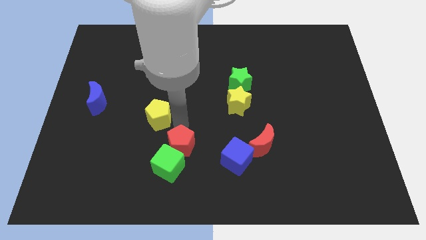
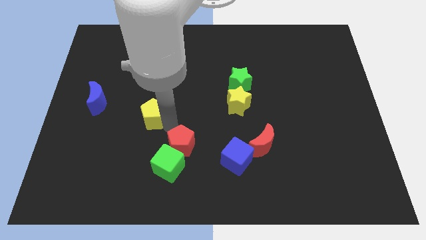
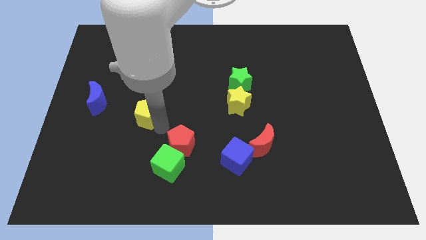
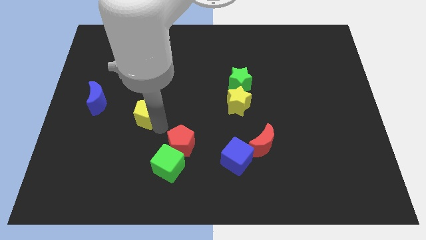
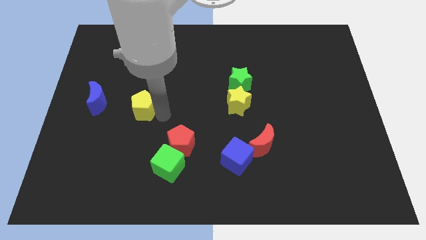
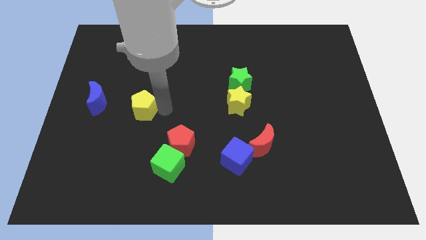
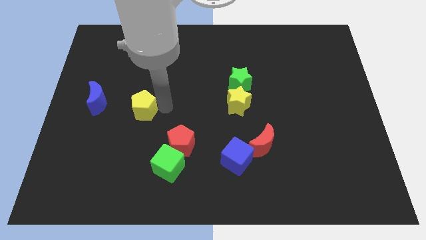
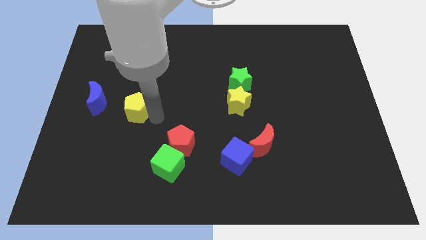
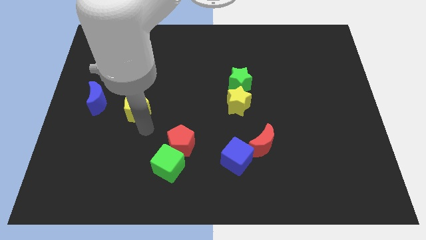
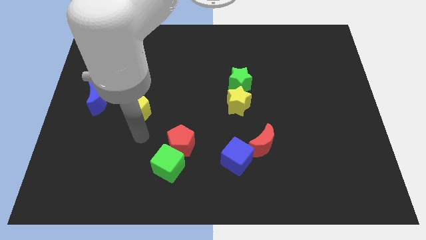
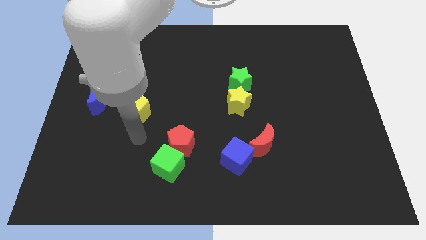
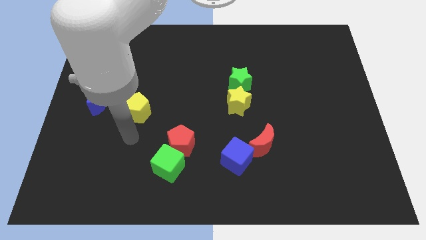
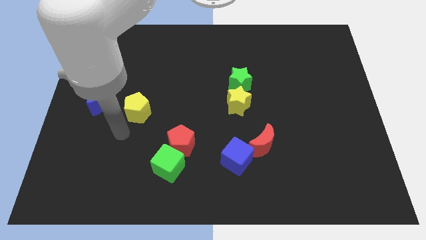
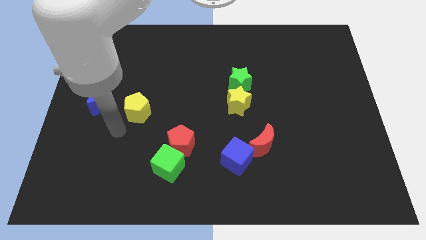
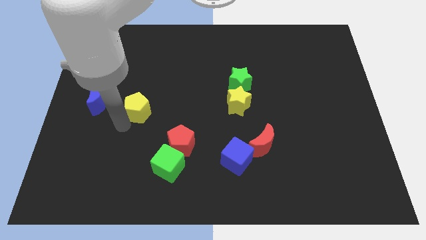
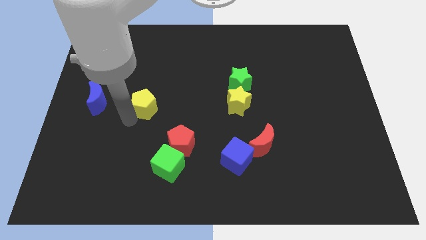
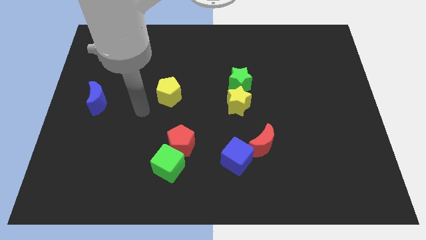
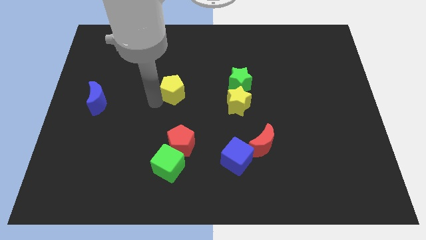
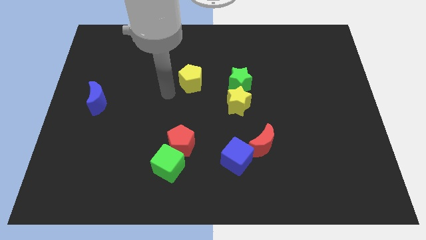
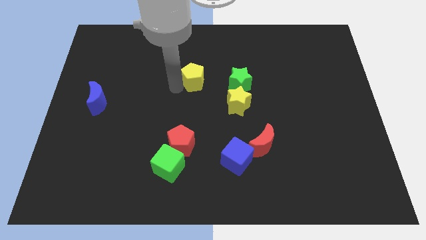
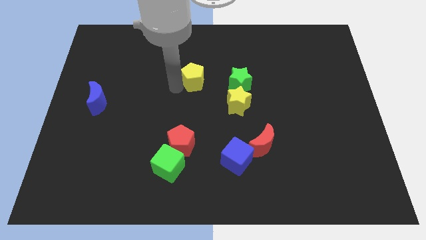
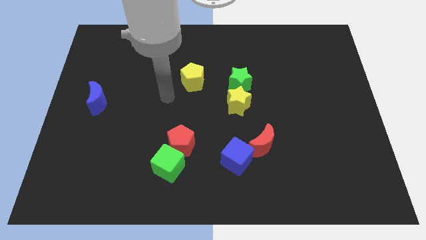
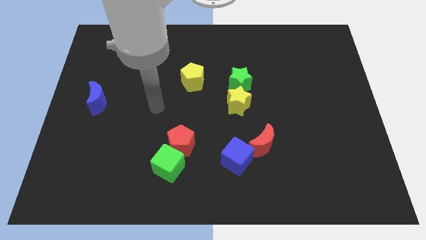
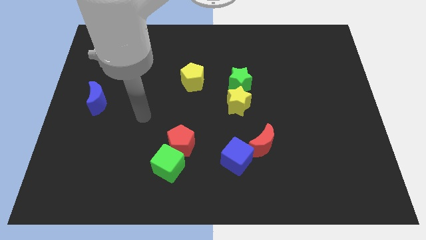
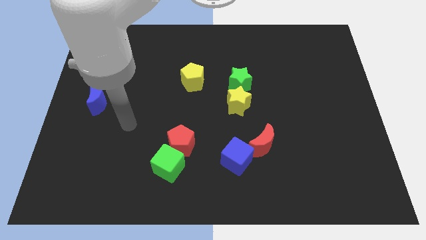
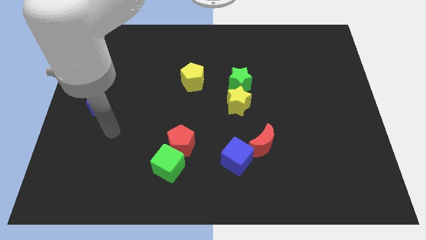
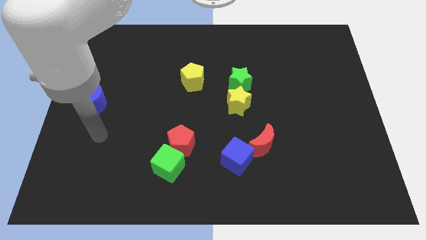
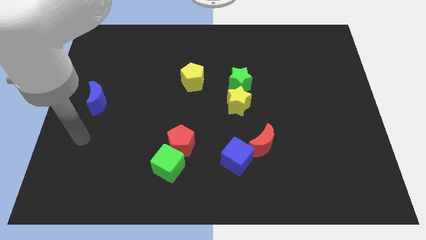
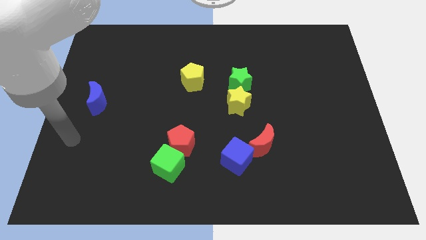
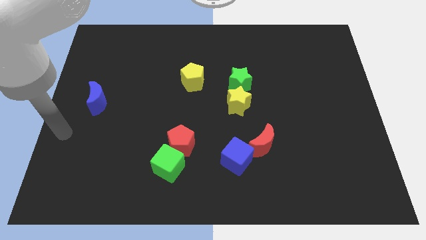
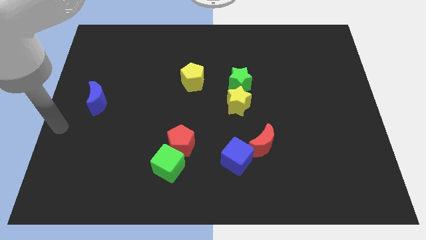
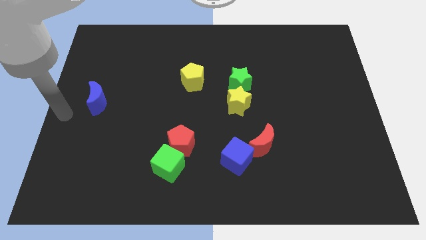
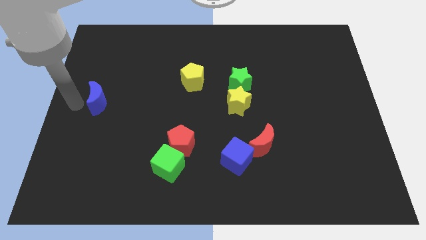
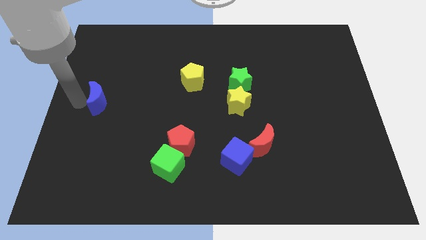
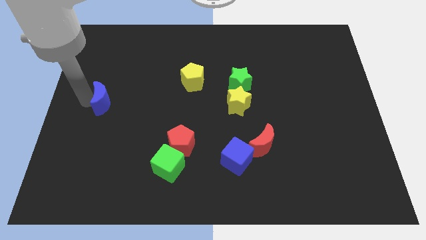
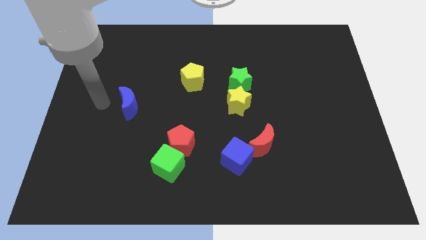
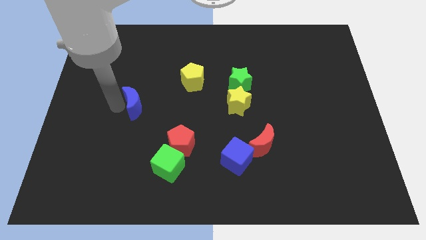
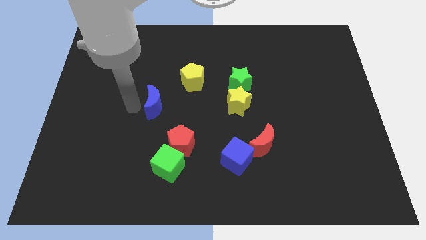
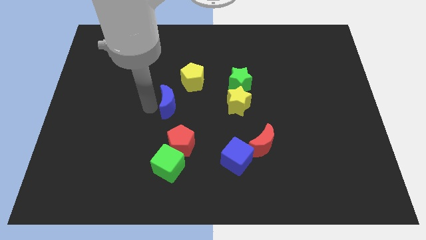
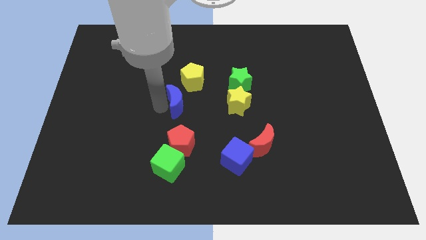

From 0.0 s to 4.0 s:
slide the yellow pentagon and blue crescent to the left side of the green and yellow stars

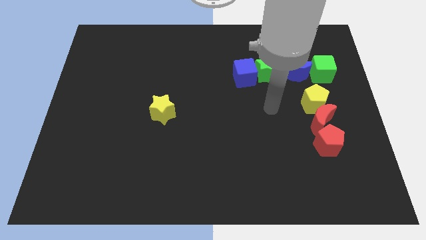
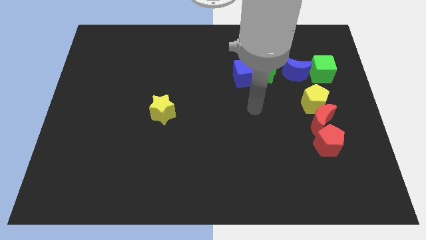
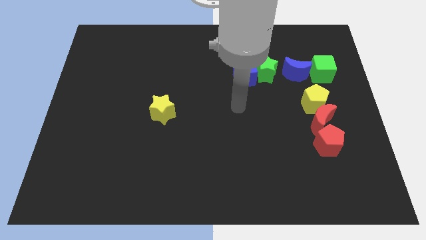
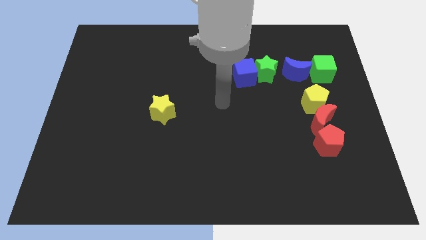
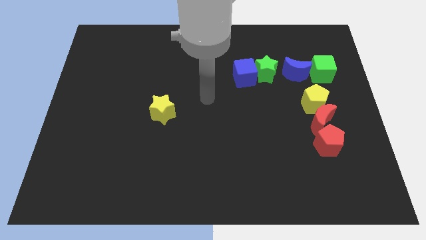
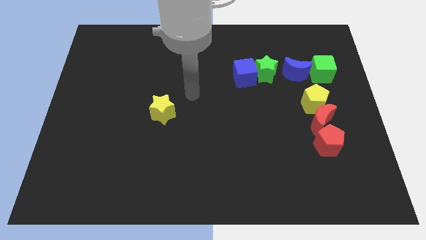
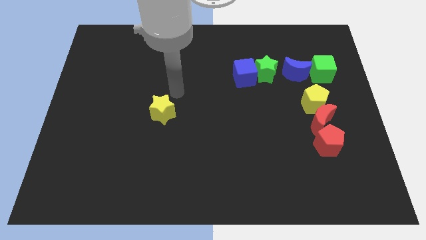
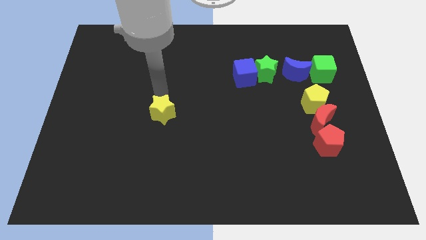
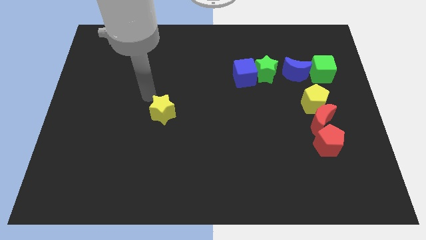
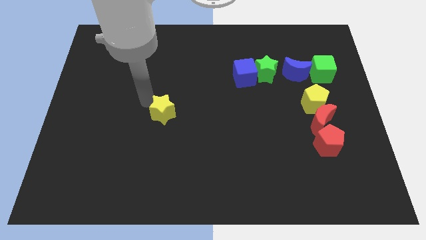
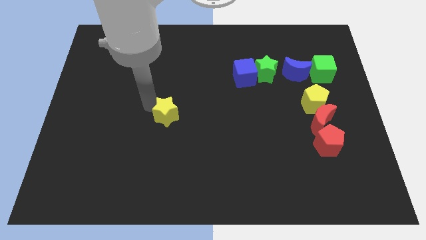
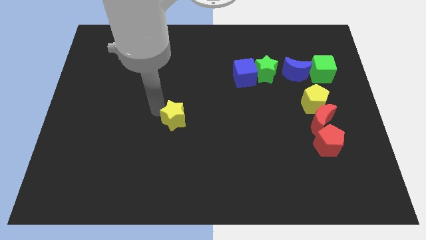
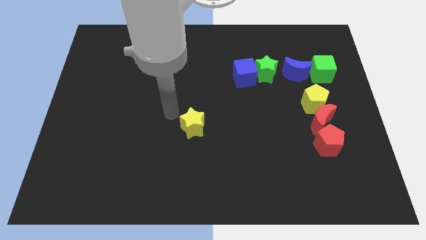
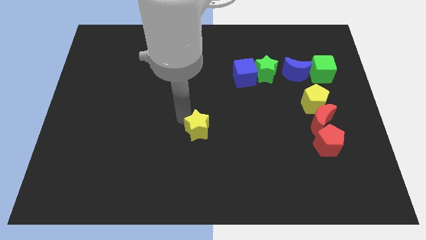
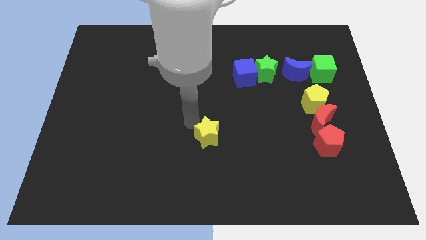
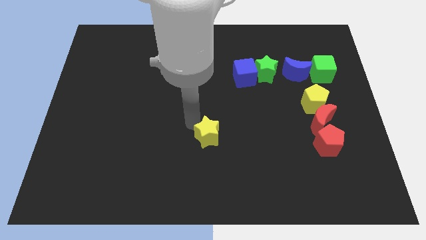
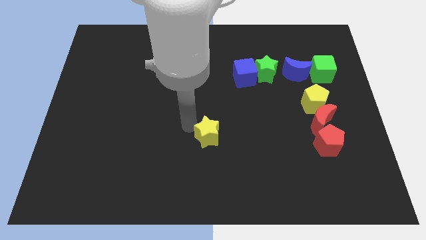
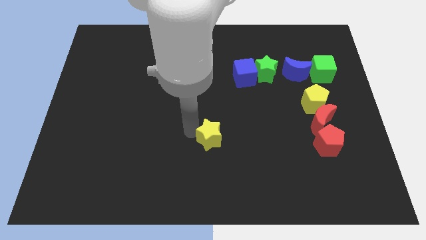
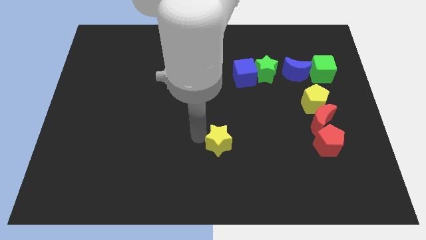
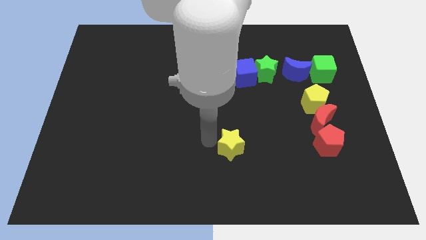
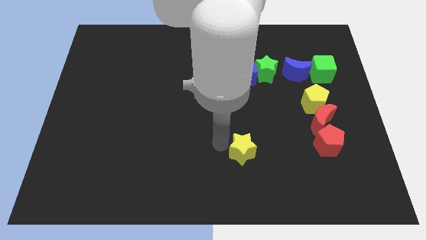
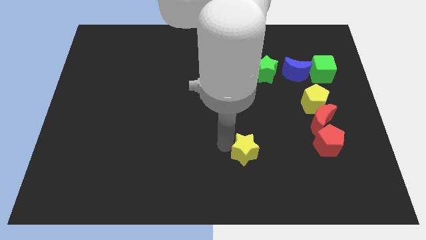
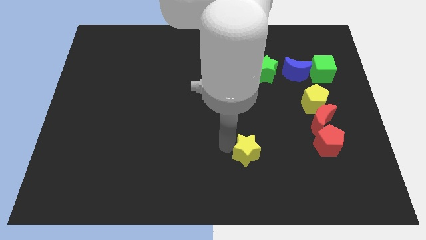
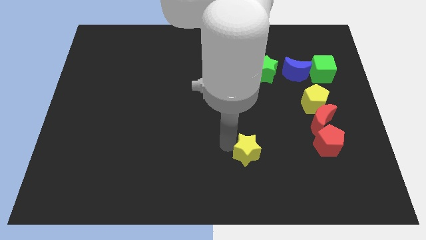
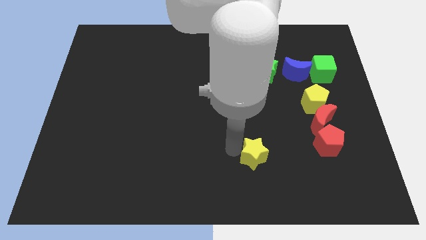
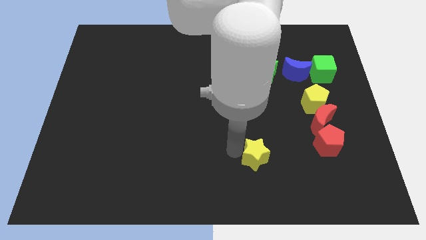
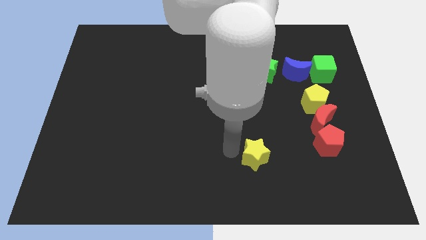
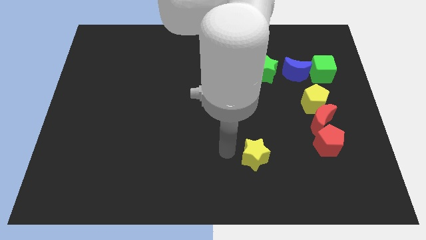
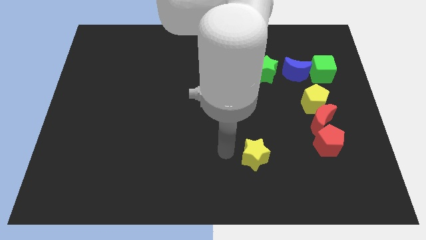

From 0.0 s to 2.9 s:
move the yellow star to the left side of the red pentagon

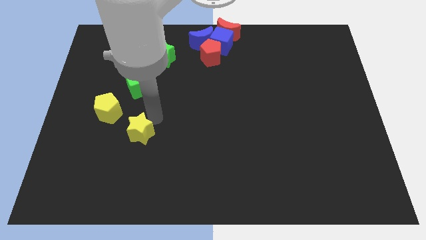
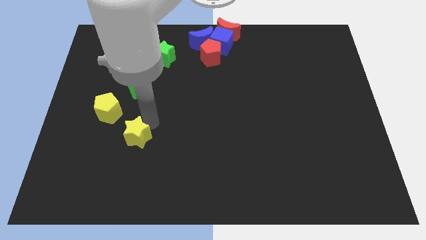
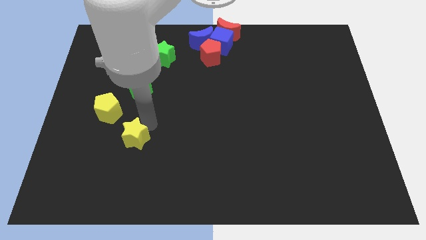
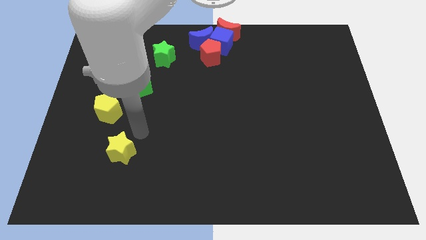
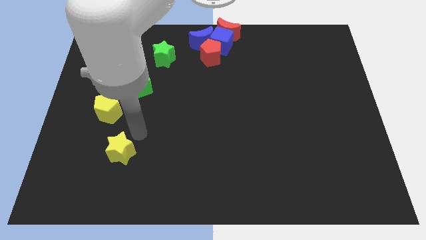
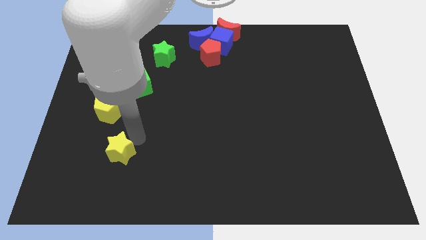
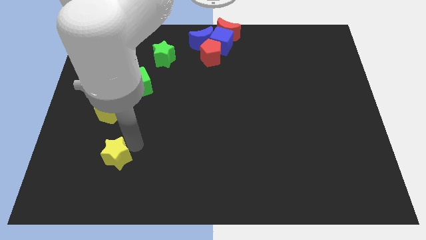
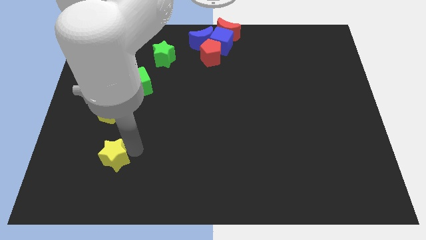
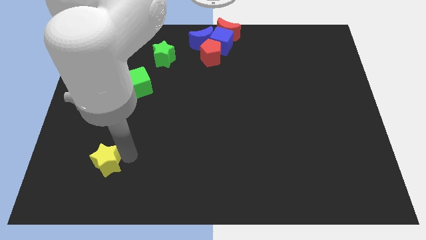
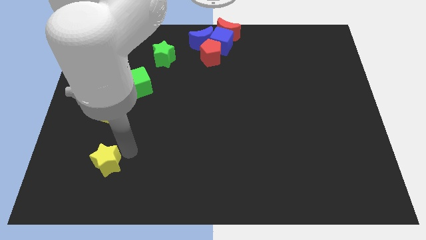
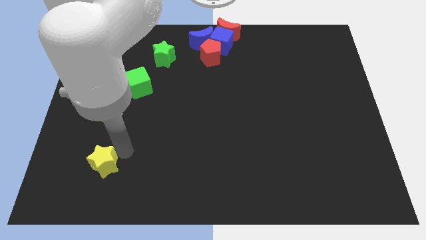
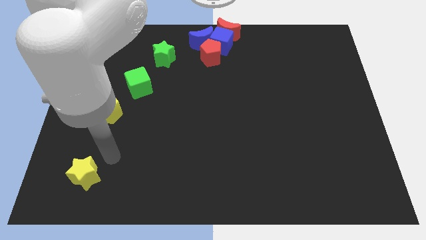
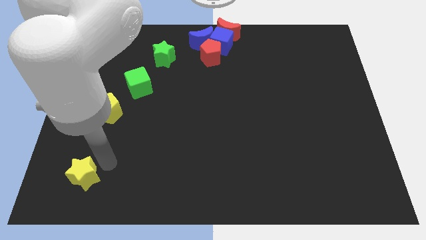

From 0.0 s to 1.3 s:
move the yellow star below the yellow pentagon

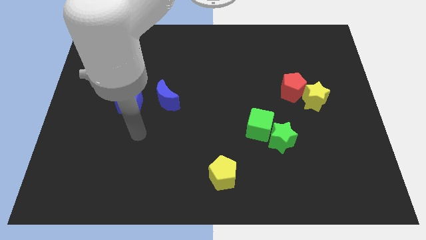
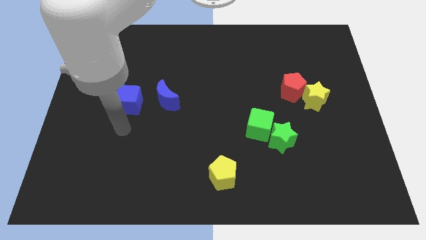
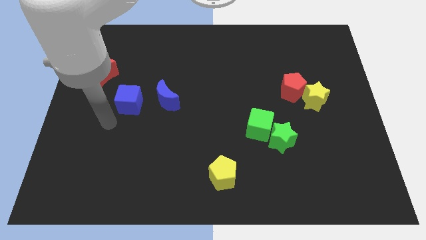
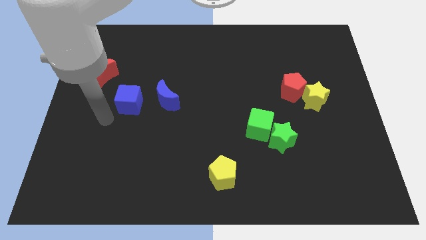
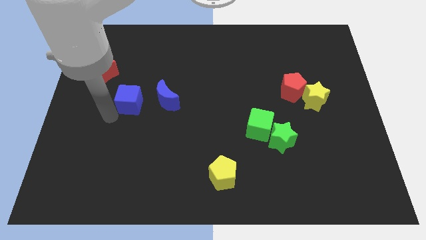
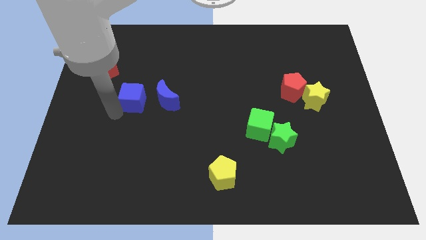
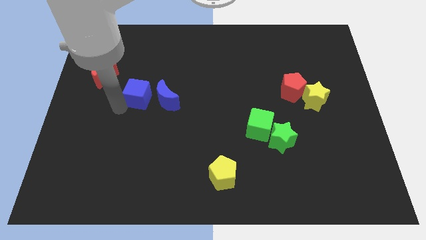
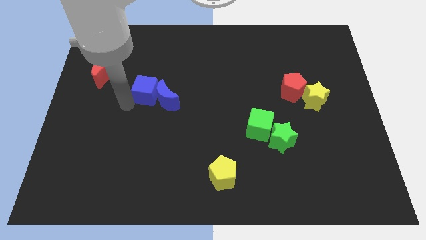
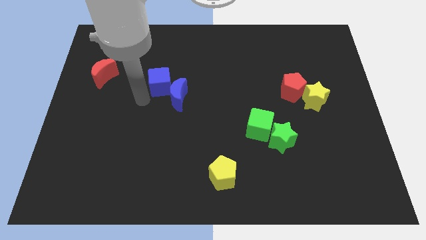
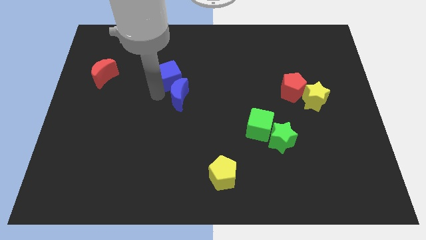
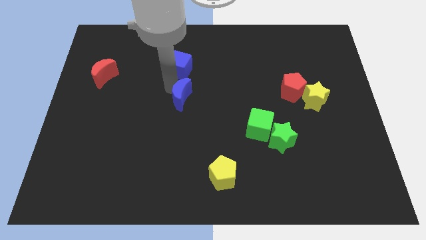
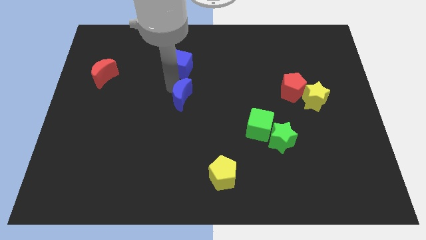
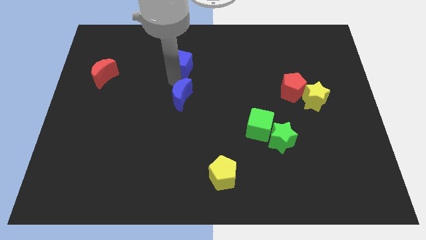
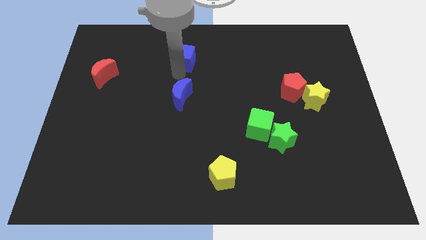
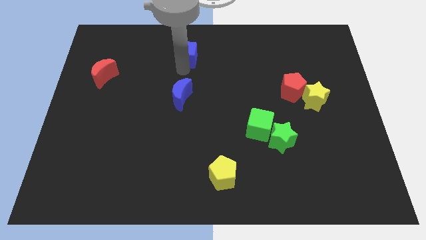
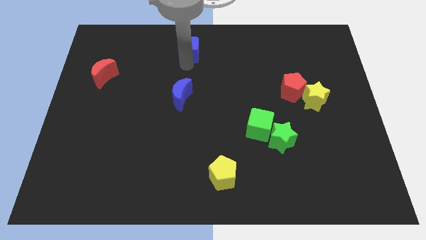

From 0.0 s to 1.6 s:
push the blue cube to the top
